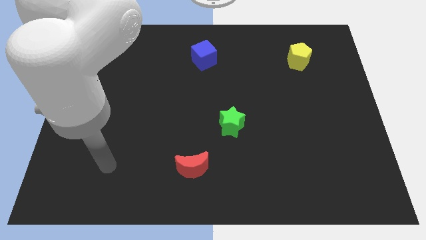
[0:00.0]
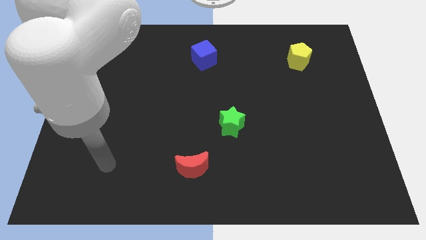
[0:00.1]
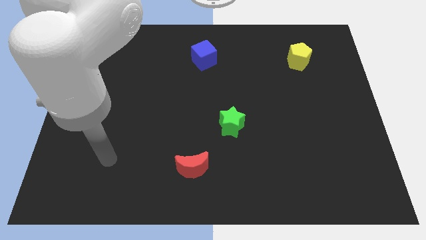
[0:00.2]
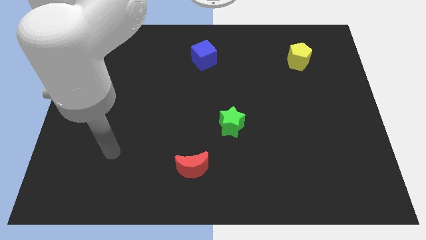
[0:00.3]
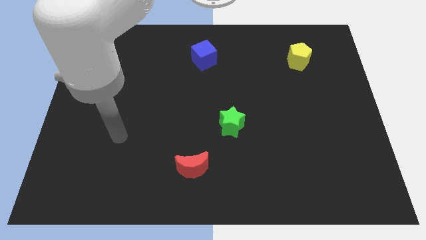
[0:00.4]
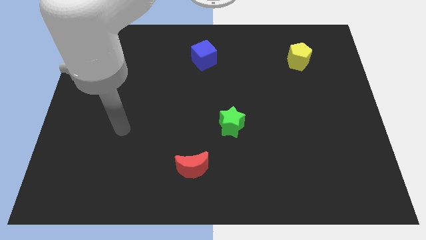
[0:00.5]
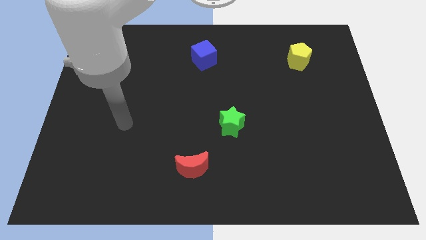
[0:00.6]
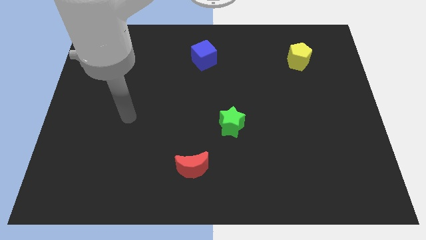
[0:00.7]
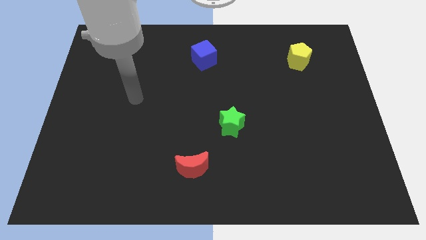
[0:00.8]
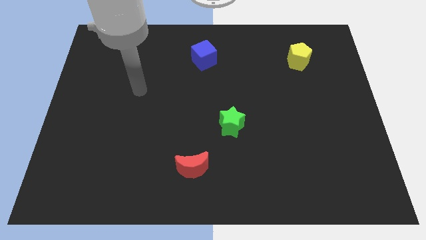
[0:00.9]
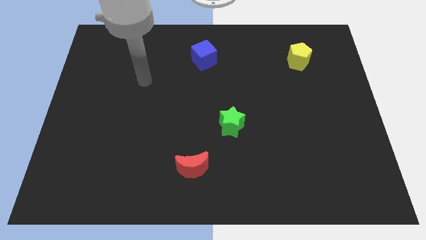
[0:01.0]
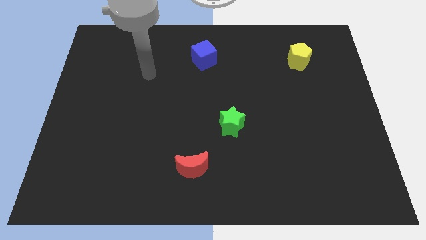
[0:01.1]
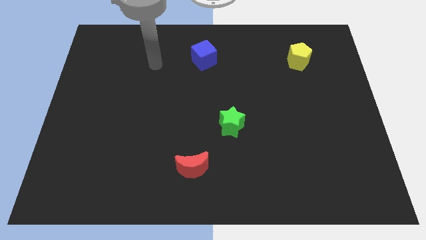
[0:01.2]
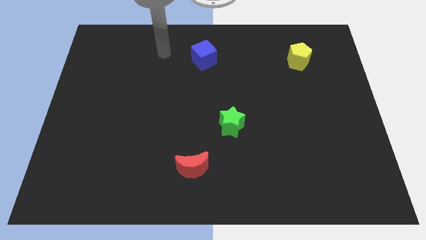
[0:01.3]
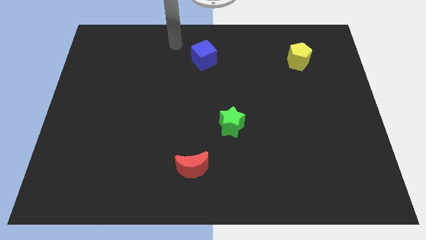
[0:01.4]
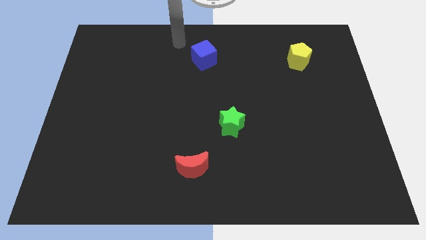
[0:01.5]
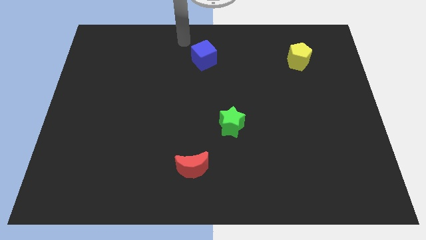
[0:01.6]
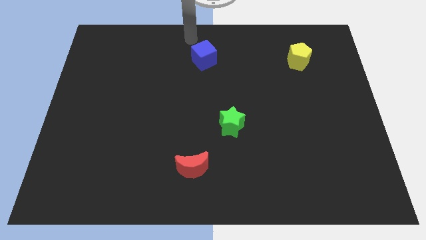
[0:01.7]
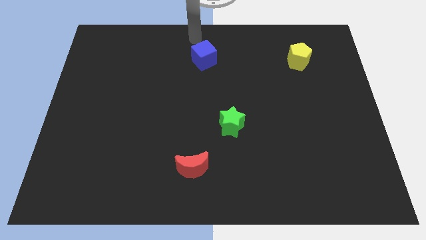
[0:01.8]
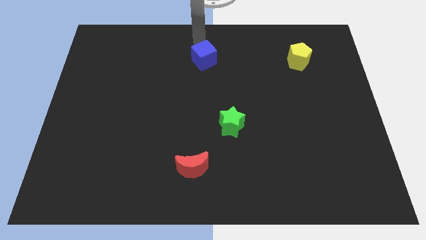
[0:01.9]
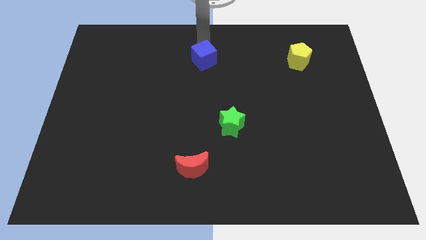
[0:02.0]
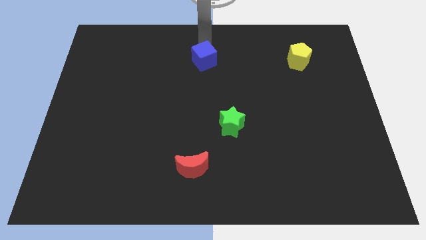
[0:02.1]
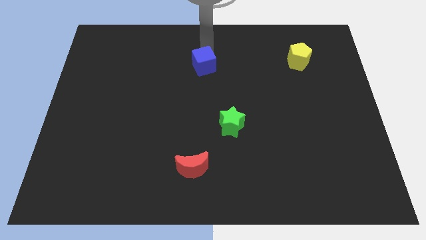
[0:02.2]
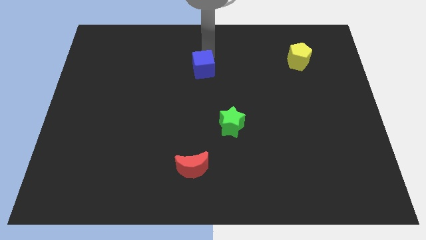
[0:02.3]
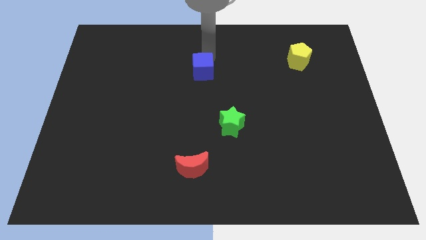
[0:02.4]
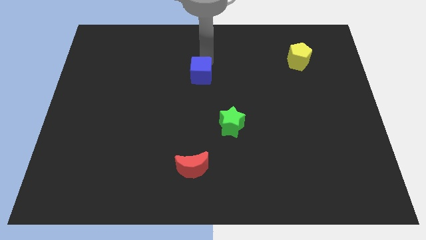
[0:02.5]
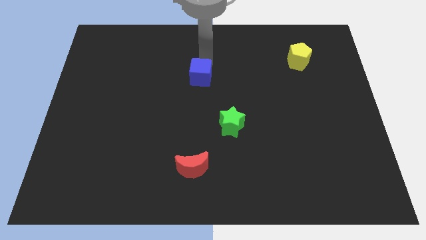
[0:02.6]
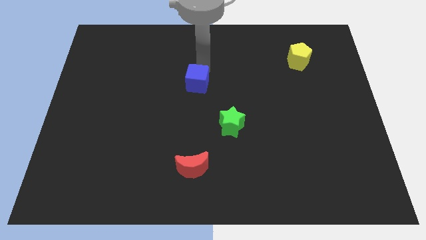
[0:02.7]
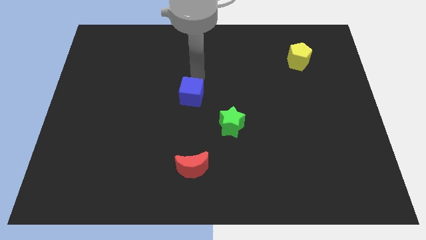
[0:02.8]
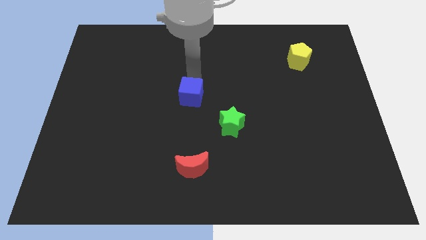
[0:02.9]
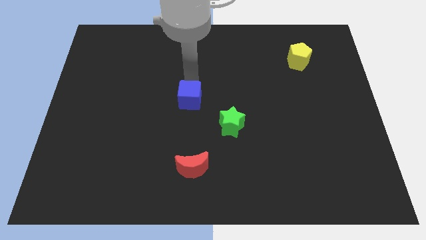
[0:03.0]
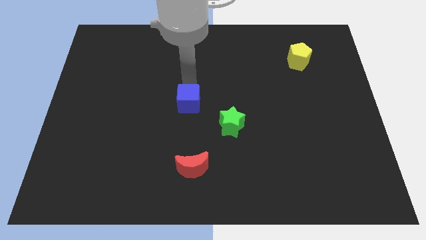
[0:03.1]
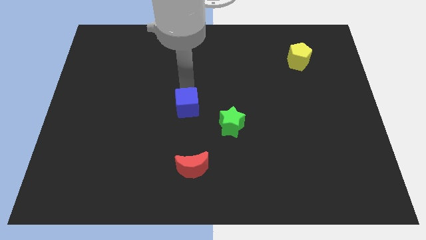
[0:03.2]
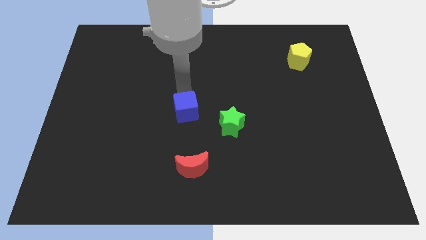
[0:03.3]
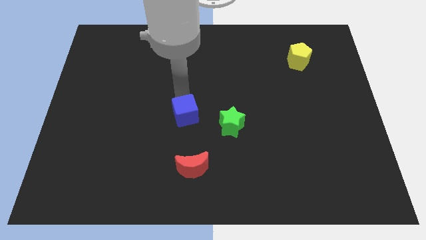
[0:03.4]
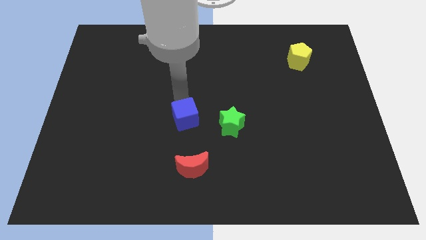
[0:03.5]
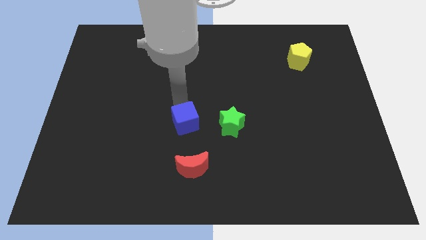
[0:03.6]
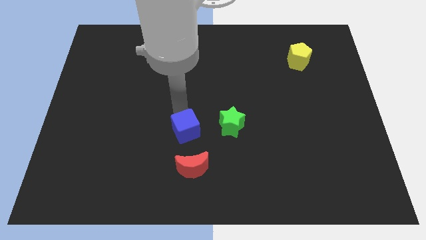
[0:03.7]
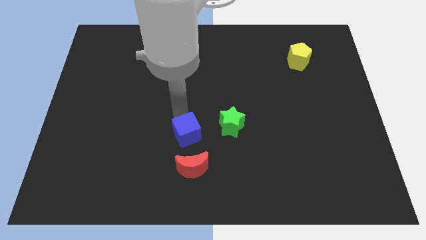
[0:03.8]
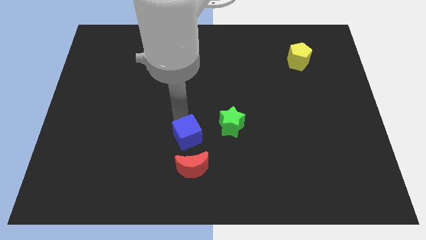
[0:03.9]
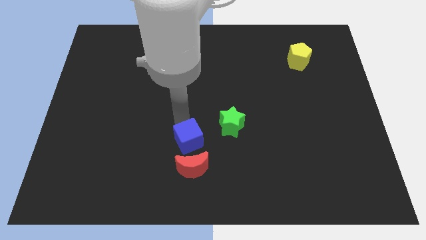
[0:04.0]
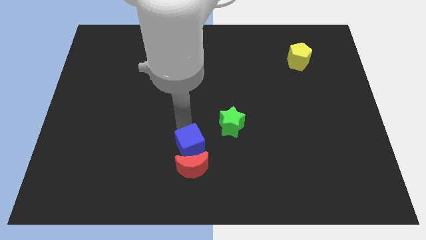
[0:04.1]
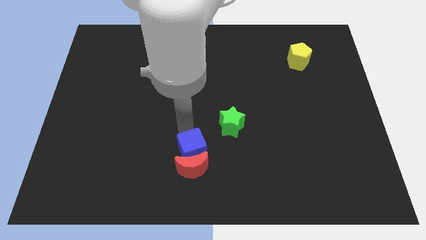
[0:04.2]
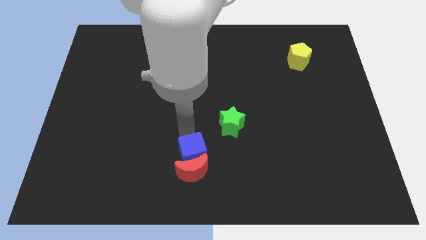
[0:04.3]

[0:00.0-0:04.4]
move the cube next to the red block

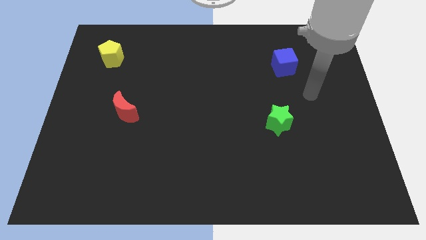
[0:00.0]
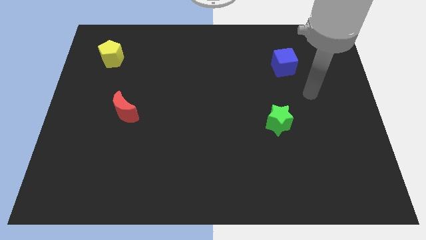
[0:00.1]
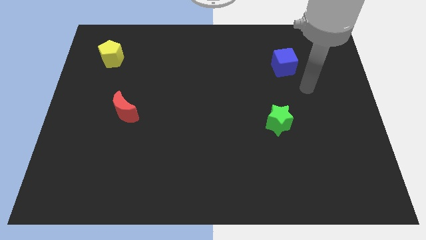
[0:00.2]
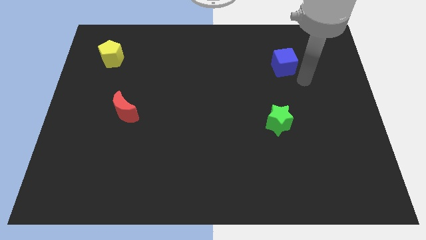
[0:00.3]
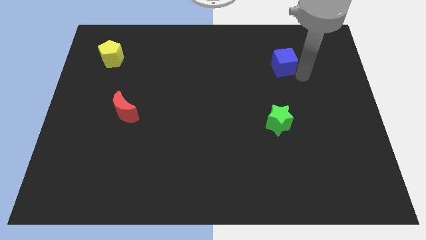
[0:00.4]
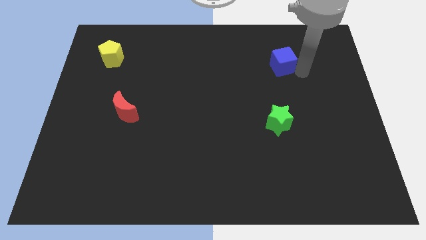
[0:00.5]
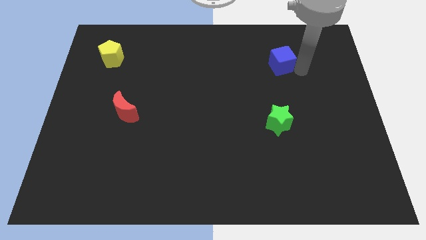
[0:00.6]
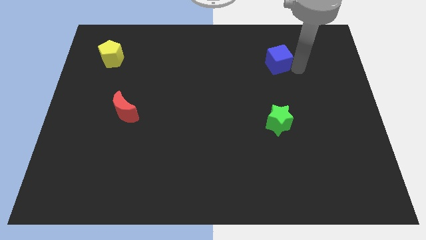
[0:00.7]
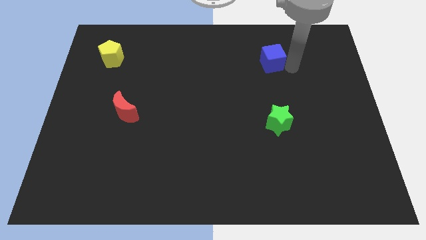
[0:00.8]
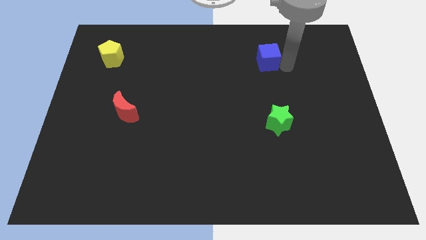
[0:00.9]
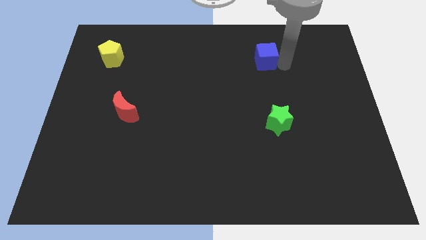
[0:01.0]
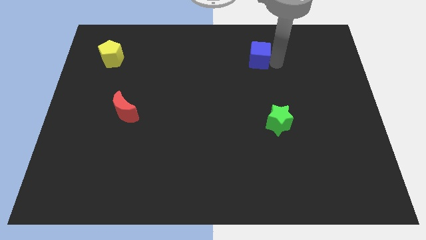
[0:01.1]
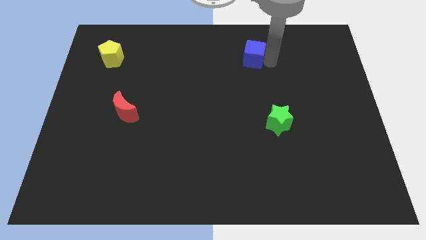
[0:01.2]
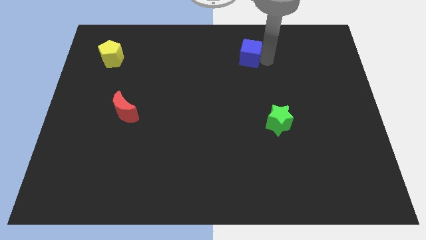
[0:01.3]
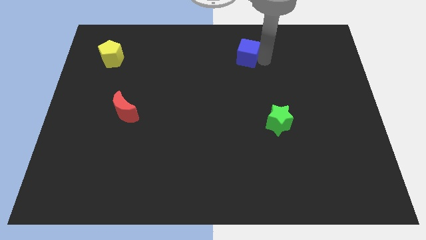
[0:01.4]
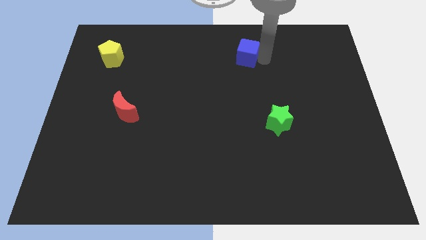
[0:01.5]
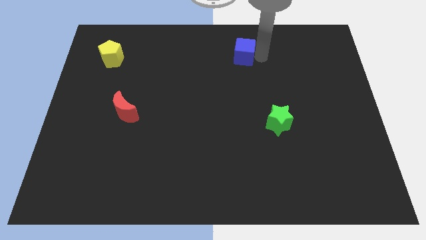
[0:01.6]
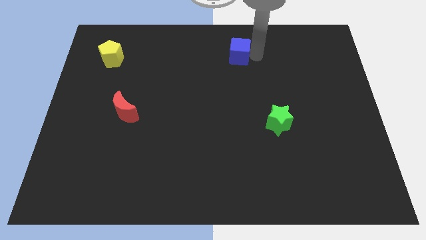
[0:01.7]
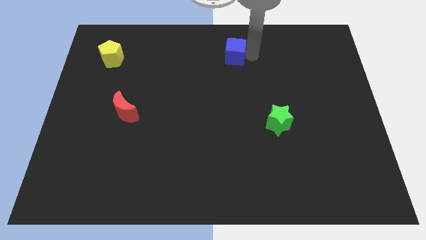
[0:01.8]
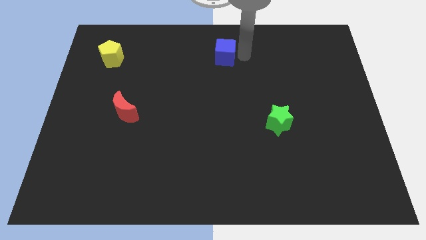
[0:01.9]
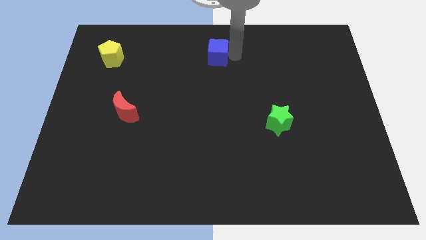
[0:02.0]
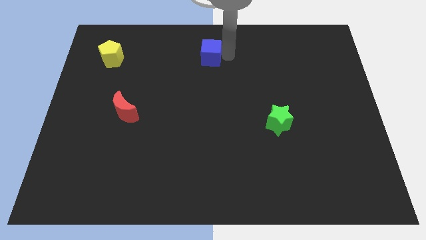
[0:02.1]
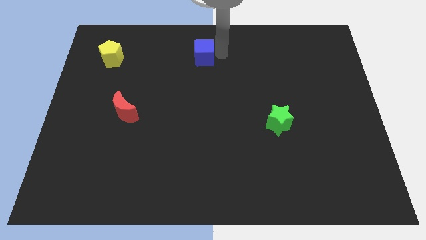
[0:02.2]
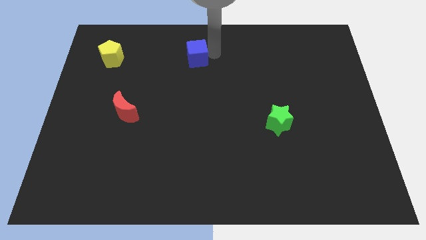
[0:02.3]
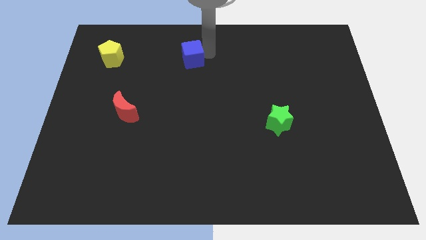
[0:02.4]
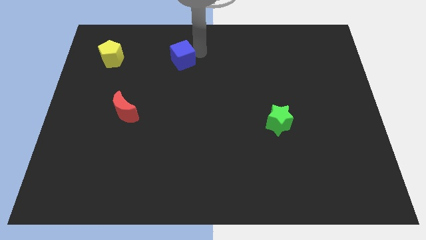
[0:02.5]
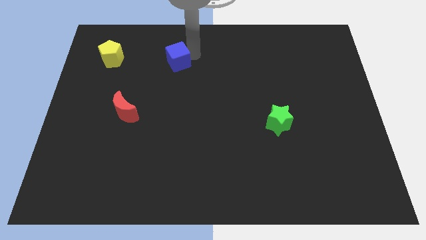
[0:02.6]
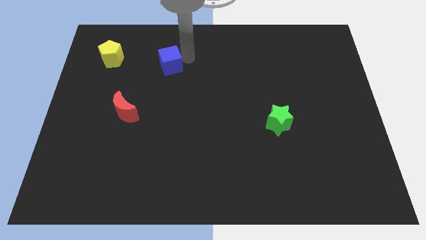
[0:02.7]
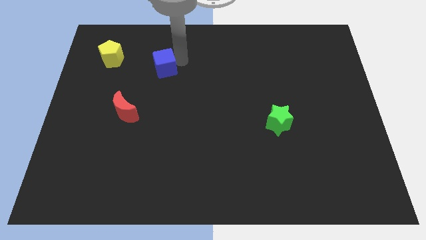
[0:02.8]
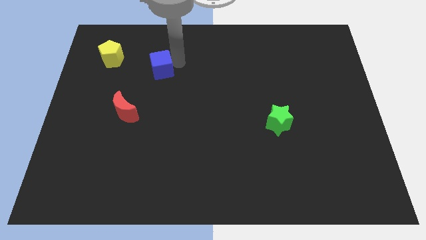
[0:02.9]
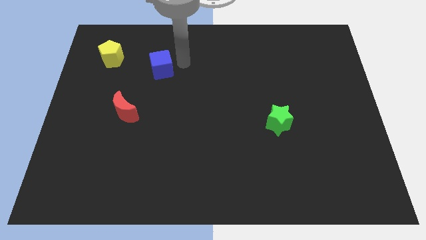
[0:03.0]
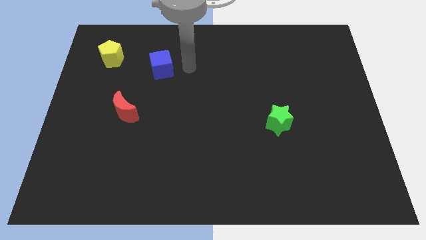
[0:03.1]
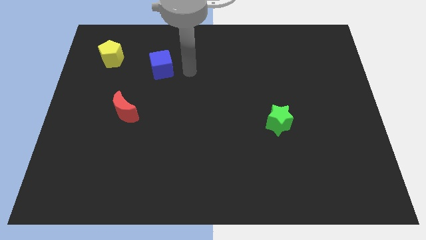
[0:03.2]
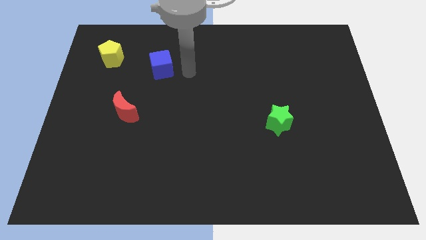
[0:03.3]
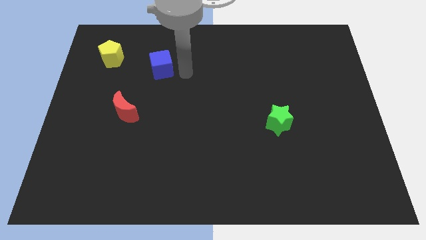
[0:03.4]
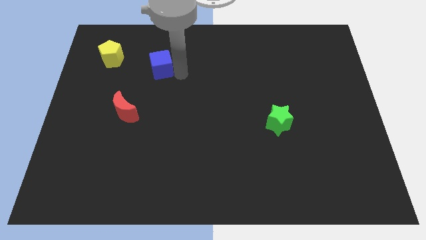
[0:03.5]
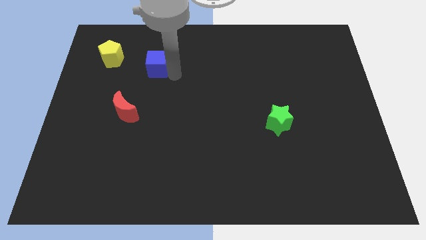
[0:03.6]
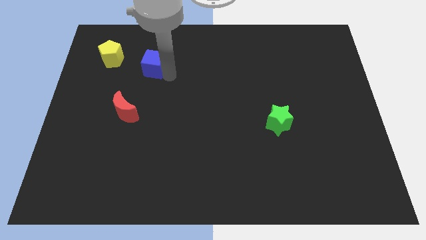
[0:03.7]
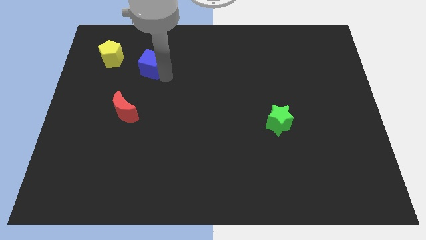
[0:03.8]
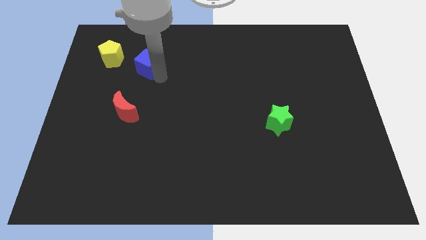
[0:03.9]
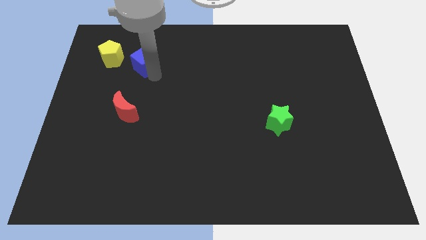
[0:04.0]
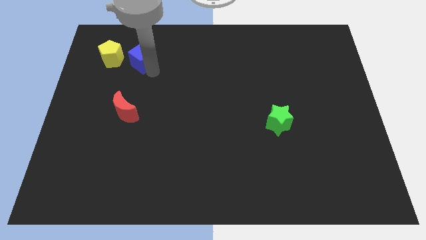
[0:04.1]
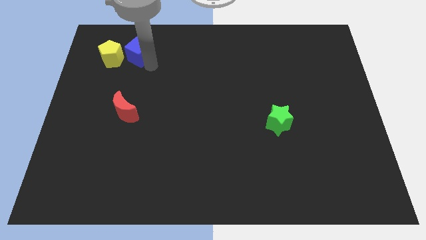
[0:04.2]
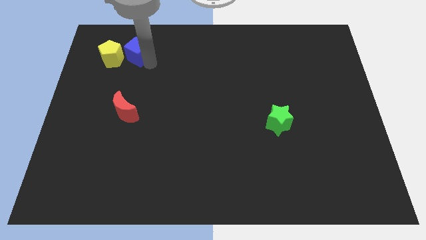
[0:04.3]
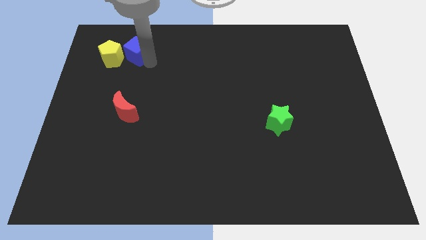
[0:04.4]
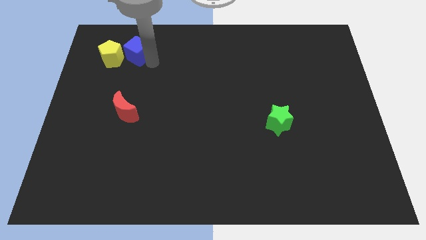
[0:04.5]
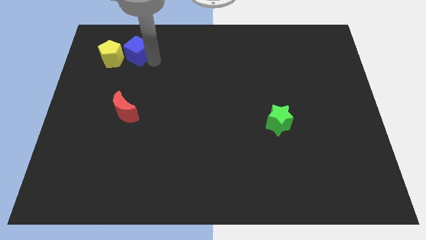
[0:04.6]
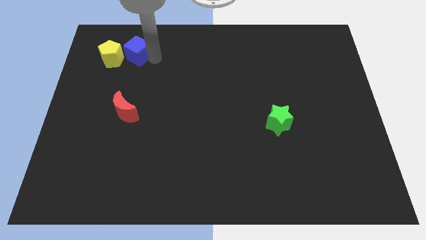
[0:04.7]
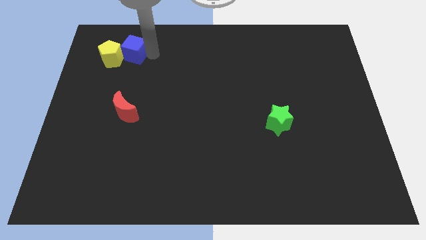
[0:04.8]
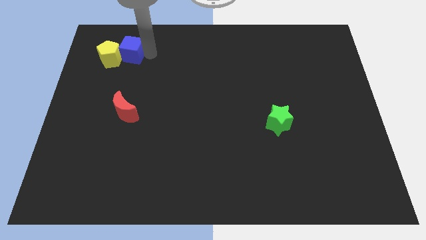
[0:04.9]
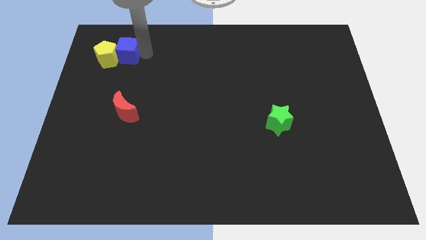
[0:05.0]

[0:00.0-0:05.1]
slide the blue block towards the yellow block
